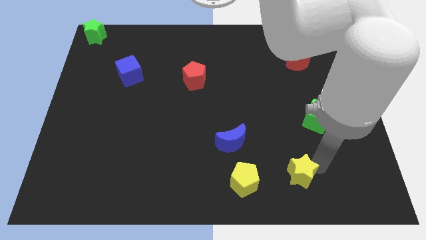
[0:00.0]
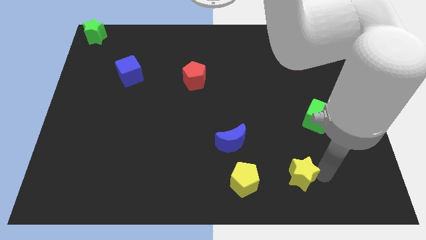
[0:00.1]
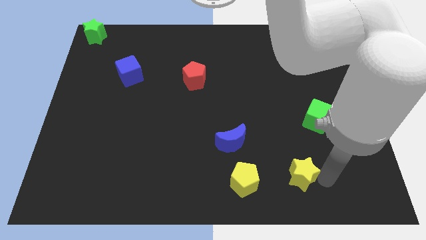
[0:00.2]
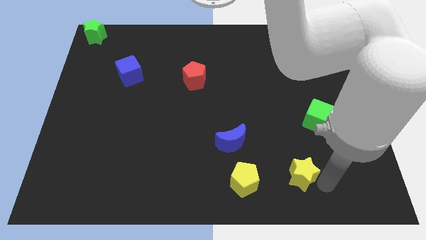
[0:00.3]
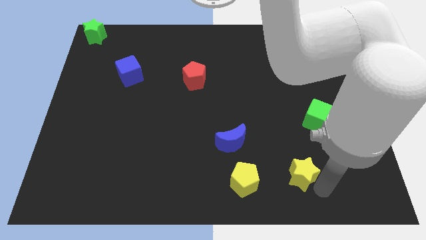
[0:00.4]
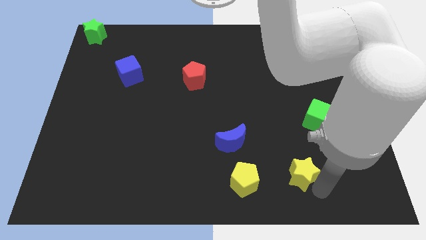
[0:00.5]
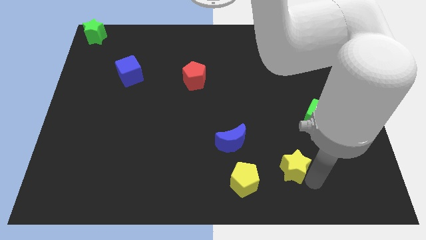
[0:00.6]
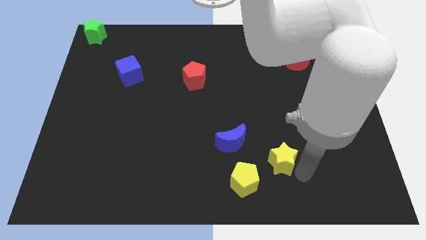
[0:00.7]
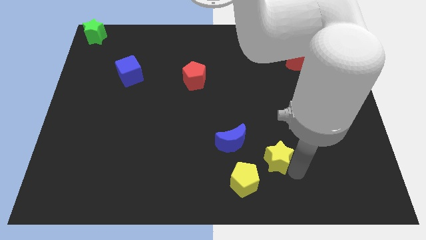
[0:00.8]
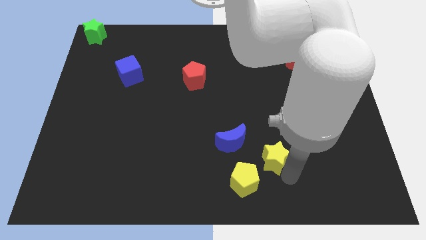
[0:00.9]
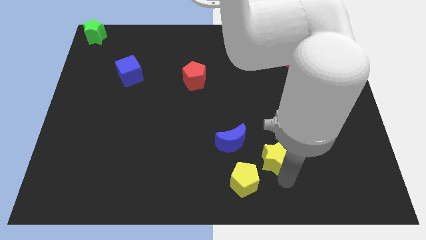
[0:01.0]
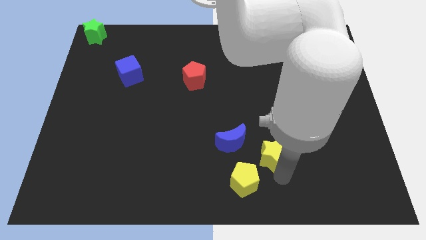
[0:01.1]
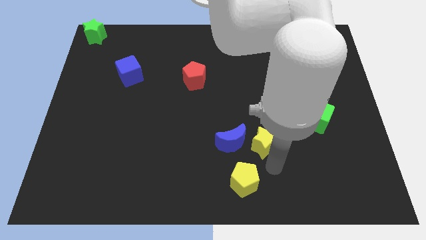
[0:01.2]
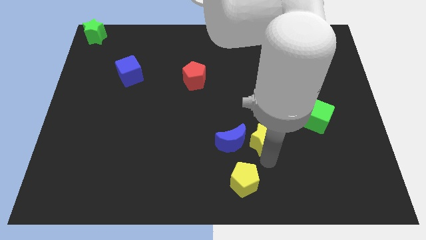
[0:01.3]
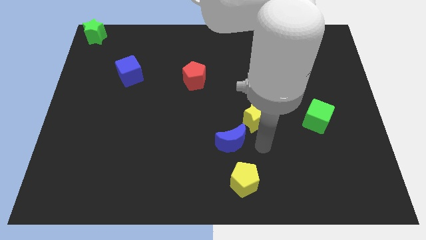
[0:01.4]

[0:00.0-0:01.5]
push the yellow star to the right side of the blue moon

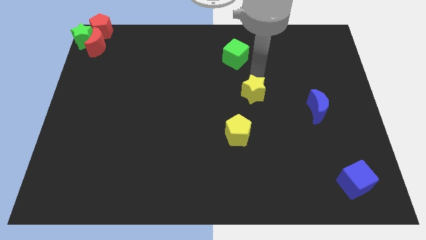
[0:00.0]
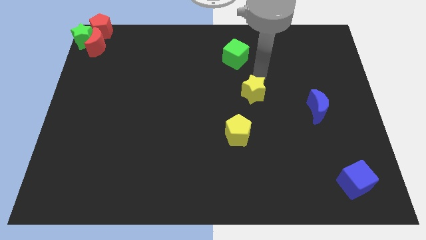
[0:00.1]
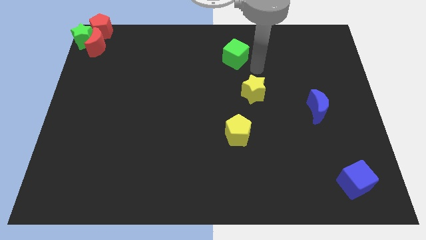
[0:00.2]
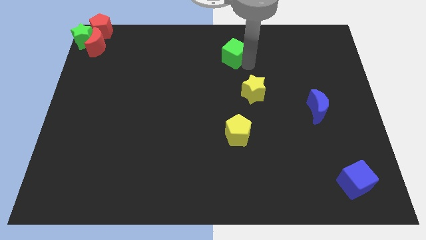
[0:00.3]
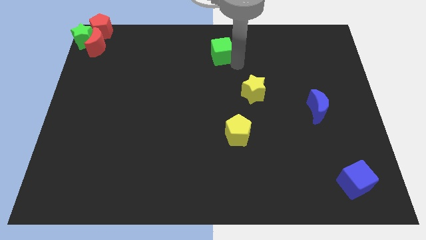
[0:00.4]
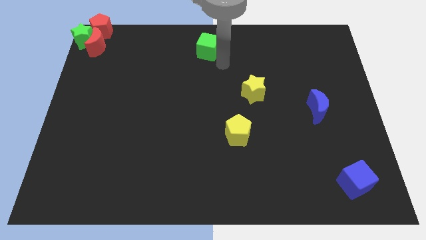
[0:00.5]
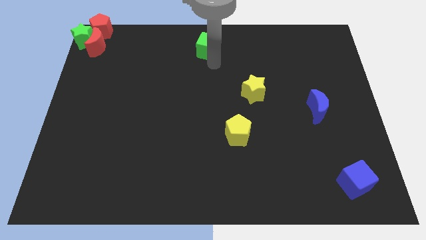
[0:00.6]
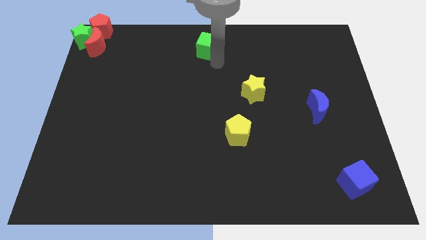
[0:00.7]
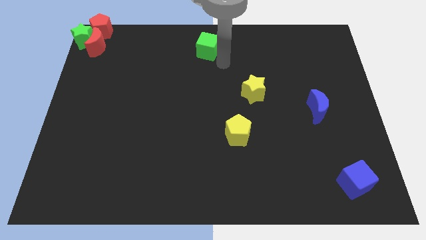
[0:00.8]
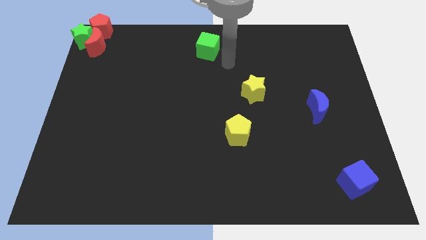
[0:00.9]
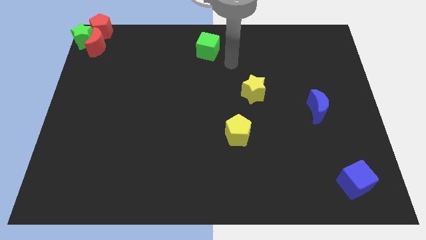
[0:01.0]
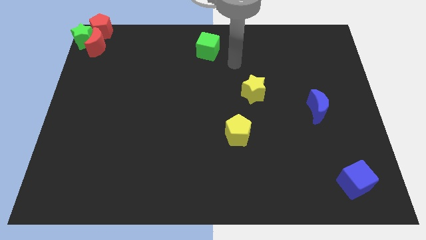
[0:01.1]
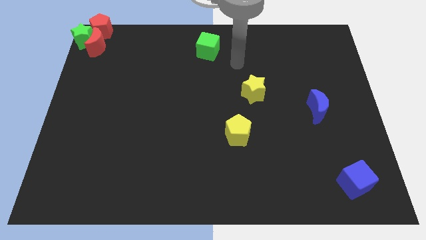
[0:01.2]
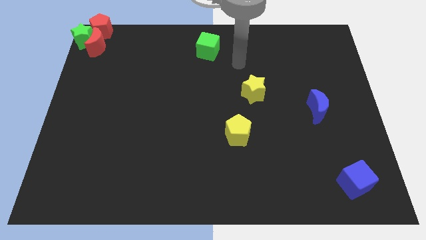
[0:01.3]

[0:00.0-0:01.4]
place the green cube towards the top center of the board

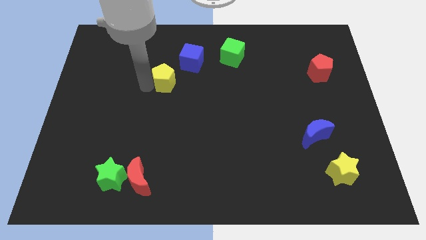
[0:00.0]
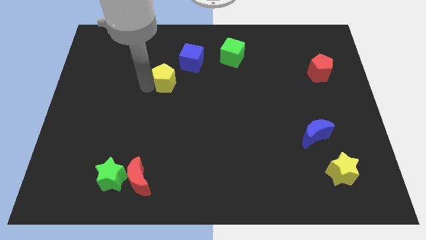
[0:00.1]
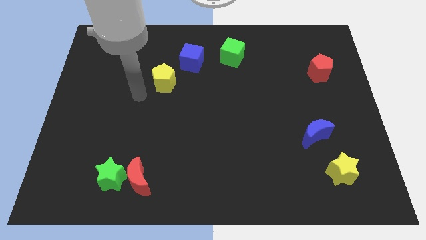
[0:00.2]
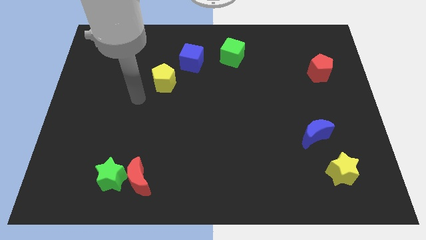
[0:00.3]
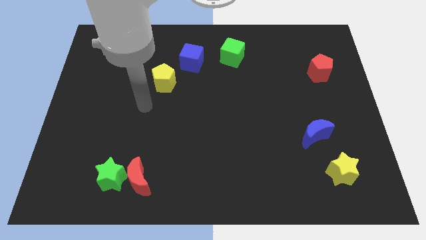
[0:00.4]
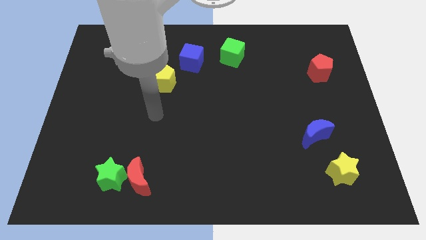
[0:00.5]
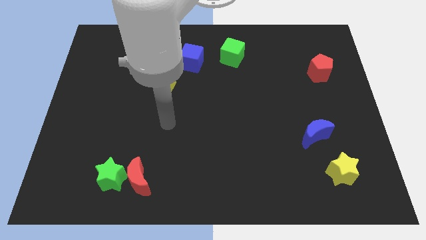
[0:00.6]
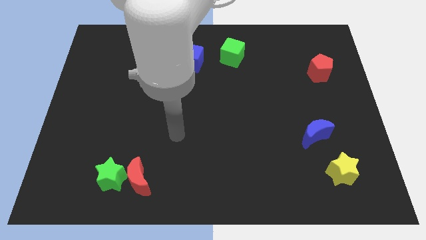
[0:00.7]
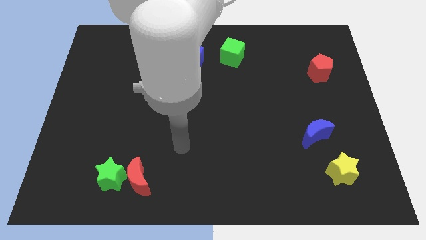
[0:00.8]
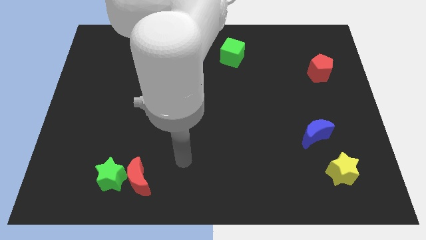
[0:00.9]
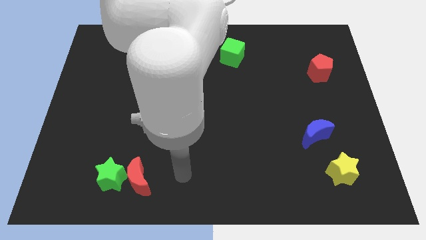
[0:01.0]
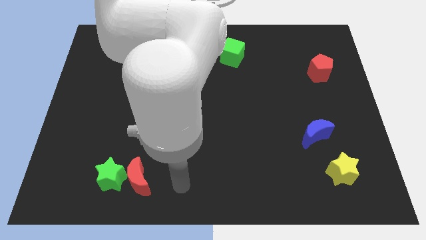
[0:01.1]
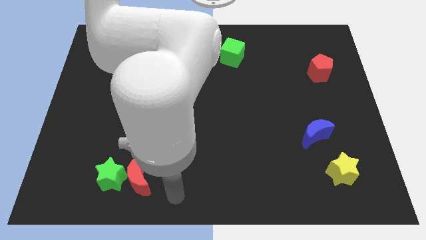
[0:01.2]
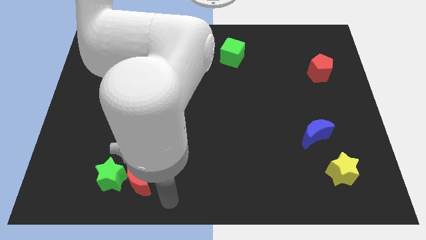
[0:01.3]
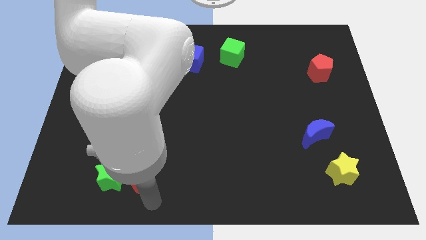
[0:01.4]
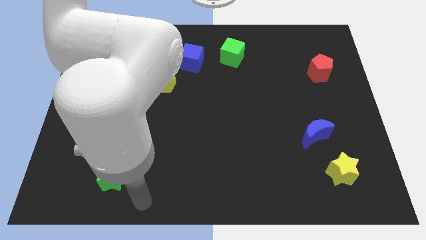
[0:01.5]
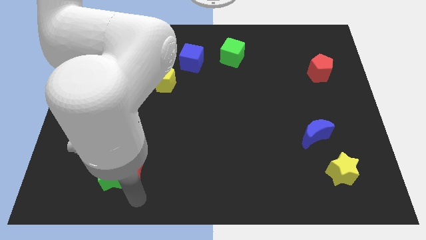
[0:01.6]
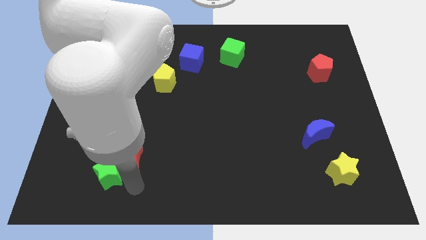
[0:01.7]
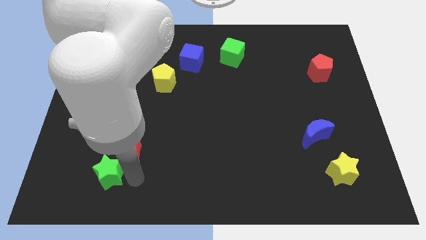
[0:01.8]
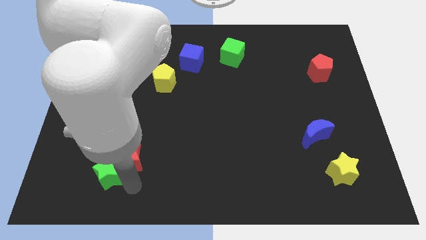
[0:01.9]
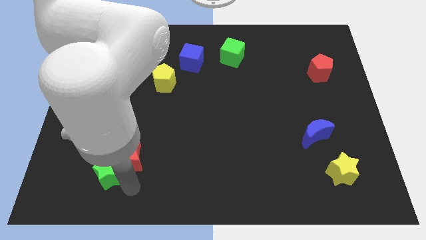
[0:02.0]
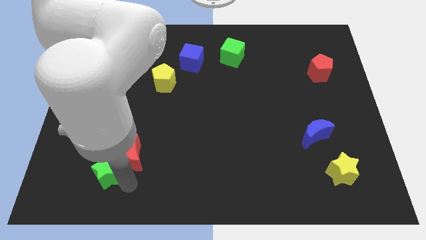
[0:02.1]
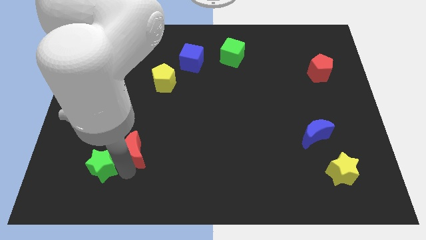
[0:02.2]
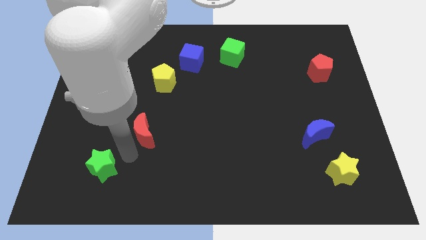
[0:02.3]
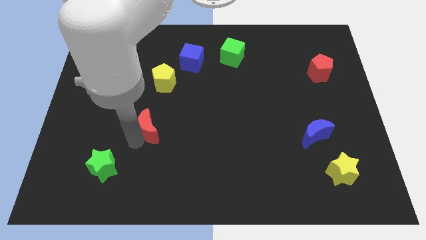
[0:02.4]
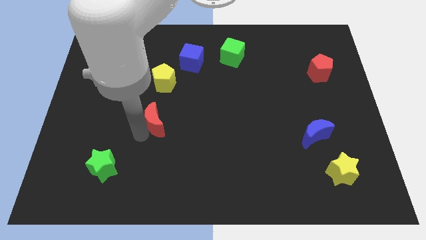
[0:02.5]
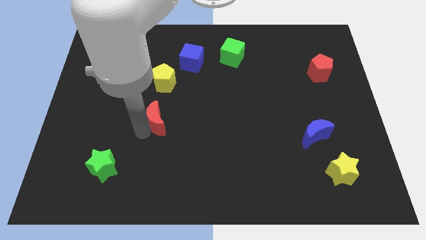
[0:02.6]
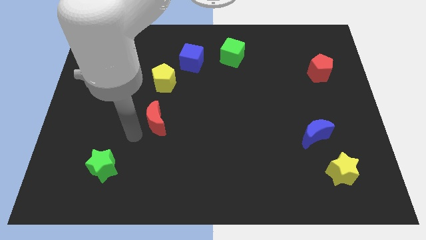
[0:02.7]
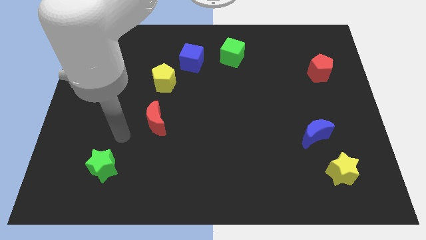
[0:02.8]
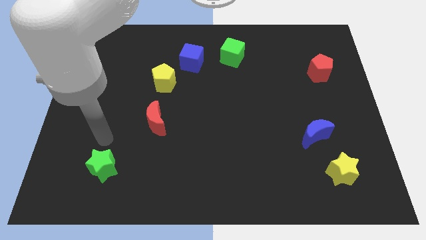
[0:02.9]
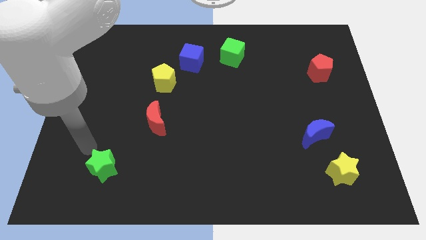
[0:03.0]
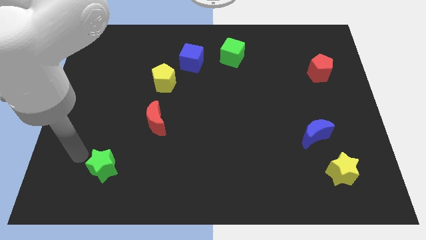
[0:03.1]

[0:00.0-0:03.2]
put the red crescent vertically below the bottom side of the yellow pentagon

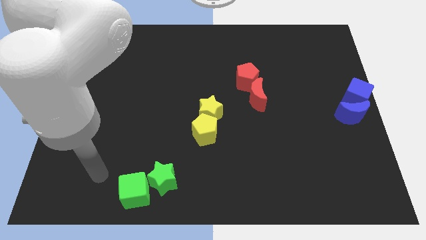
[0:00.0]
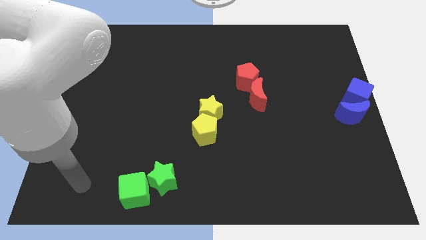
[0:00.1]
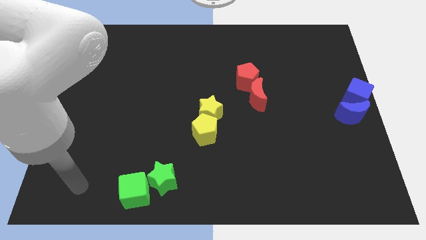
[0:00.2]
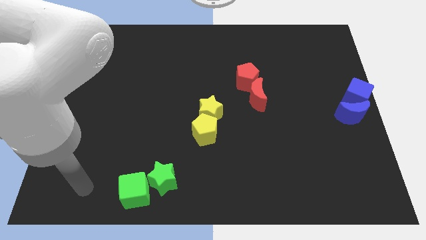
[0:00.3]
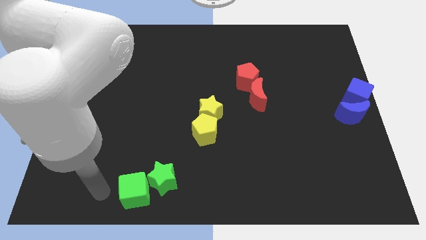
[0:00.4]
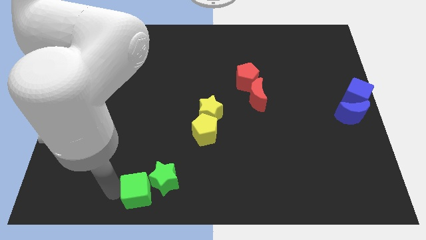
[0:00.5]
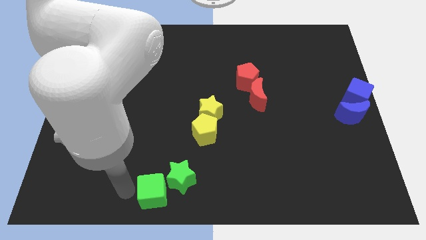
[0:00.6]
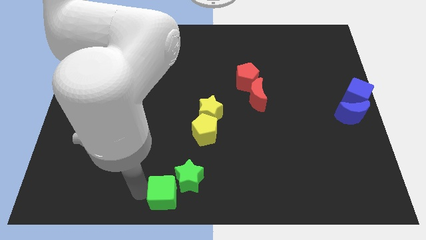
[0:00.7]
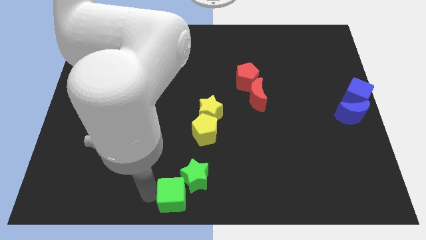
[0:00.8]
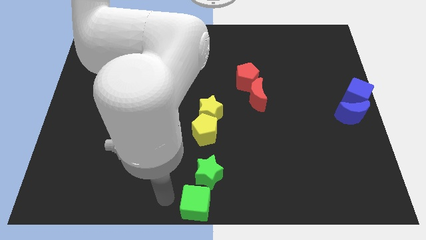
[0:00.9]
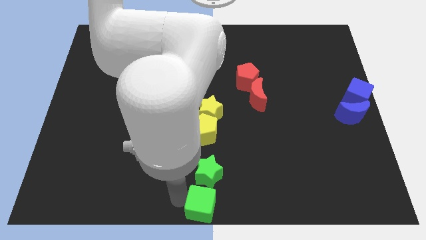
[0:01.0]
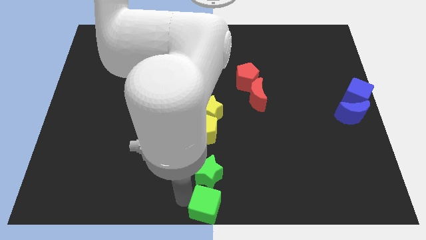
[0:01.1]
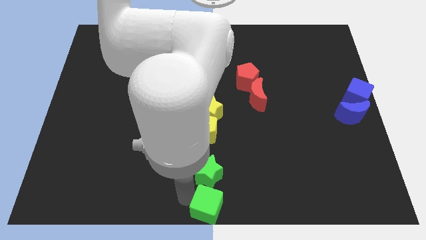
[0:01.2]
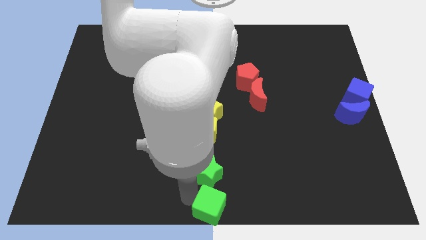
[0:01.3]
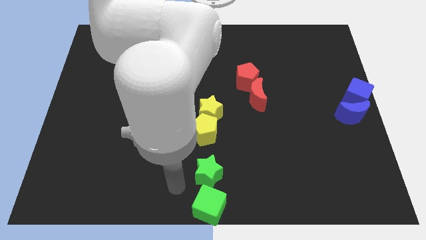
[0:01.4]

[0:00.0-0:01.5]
place the green cube below to the green star

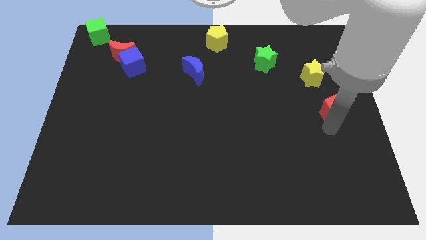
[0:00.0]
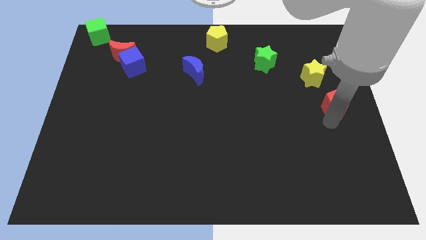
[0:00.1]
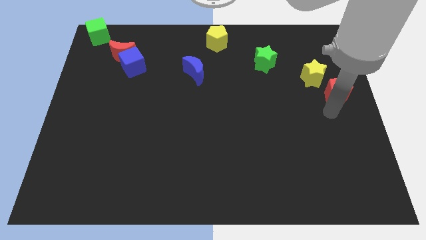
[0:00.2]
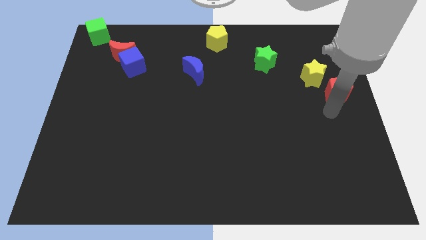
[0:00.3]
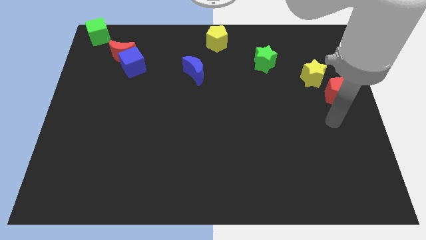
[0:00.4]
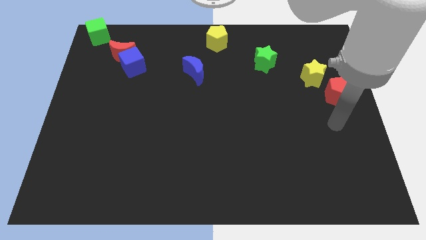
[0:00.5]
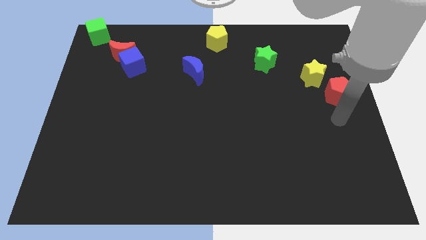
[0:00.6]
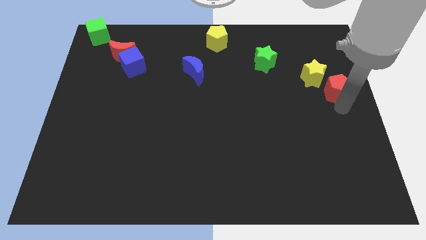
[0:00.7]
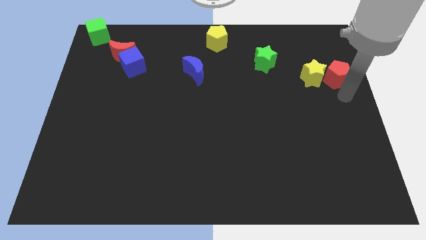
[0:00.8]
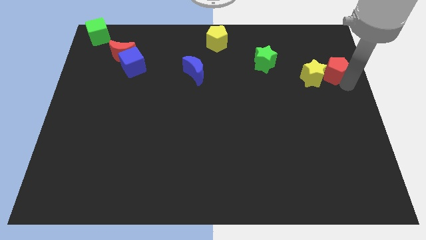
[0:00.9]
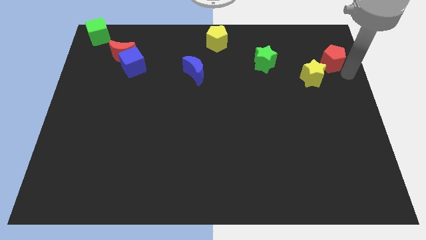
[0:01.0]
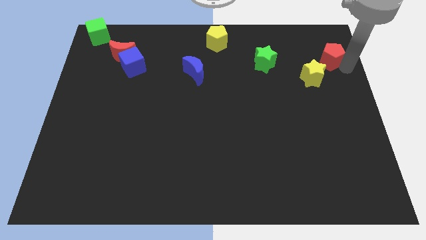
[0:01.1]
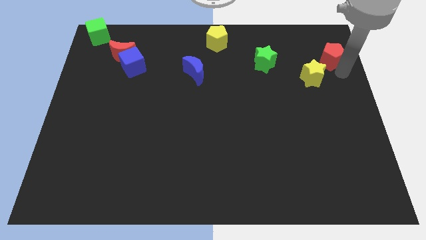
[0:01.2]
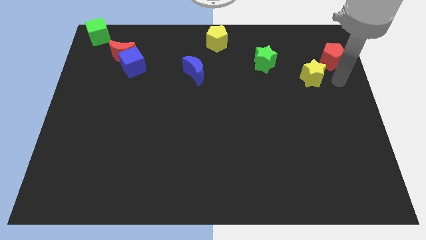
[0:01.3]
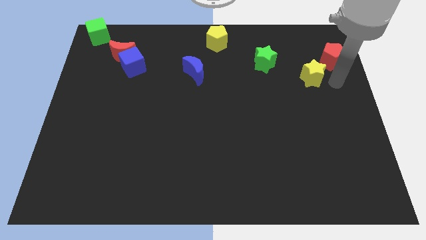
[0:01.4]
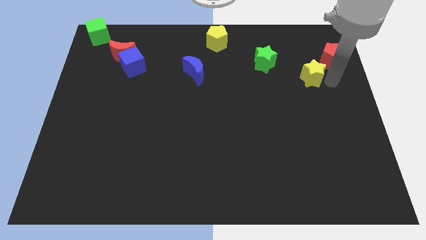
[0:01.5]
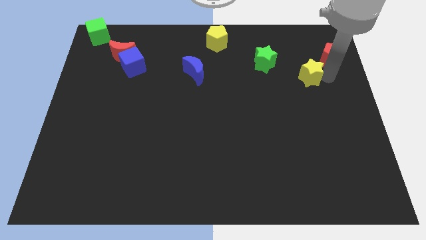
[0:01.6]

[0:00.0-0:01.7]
move the red pentagon to the top right of the yellow star
